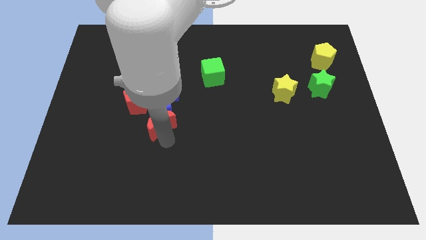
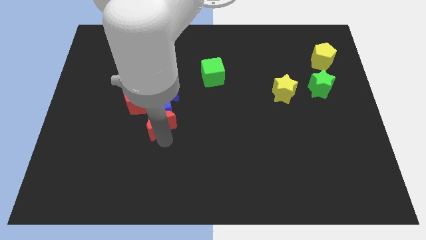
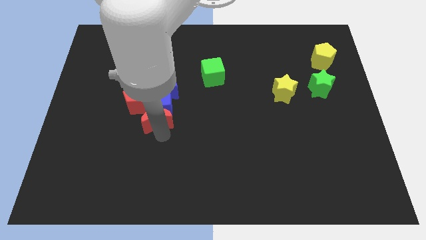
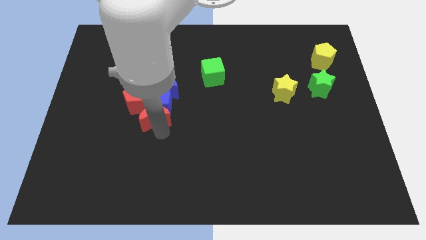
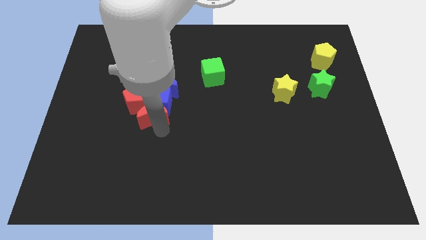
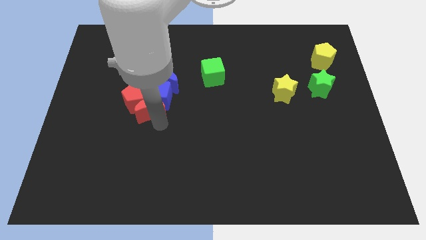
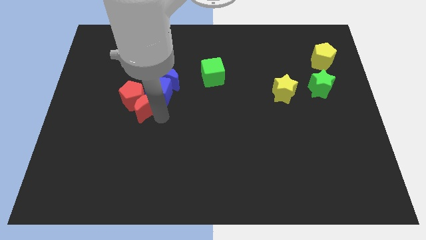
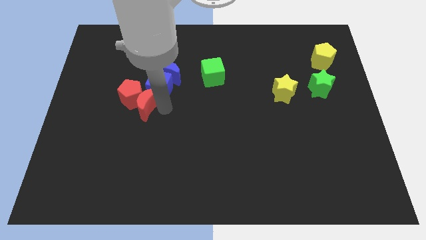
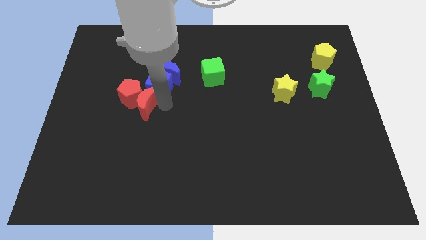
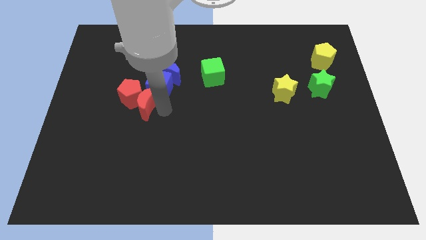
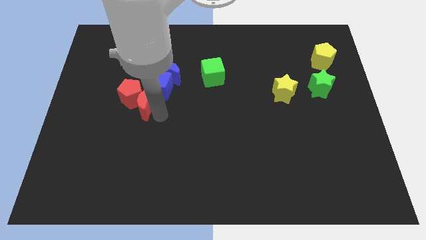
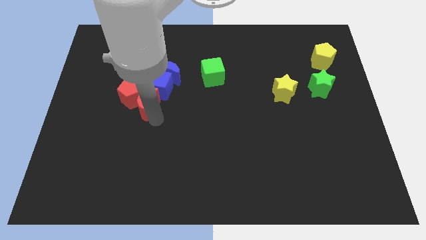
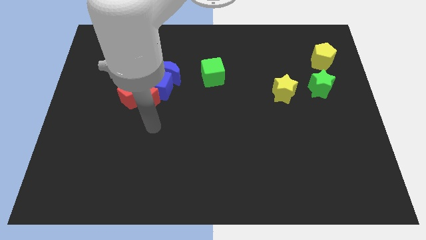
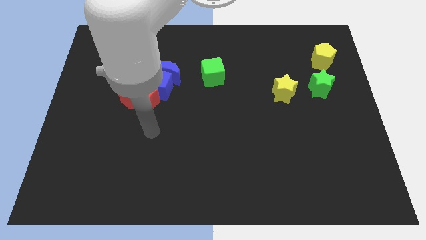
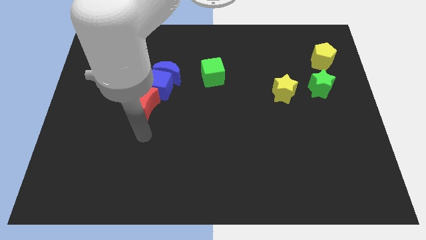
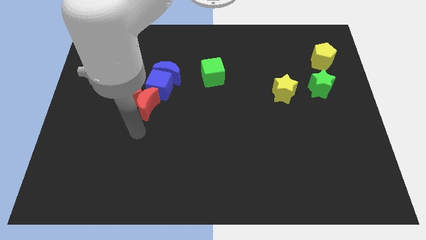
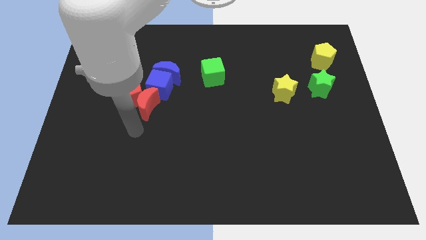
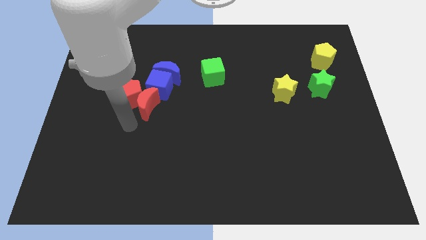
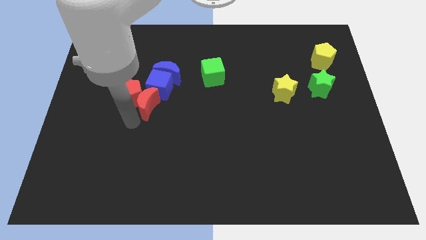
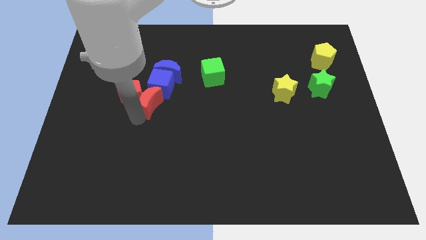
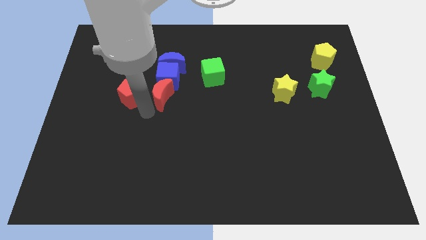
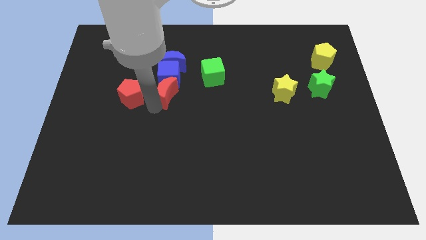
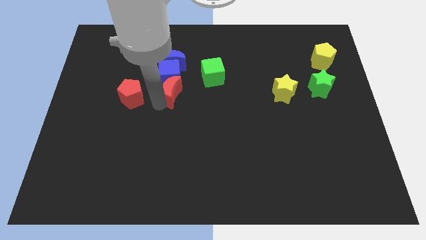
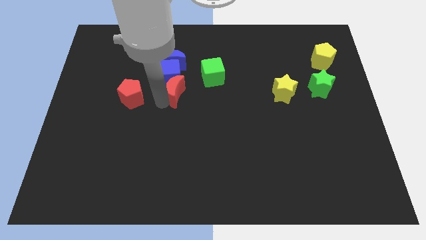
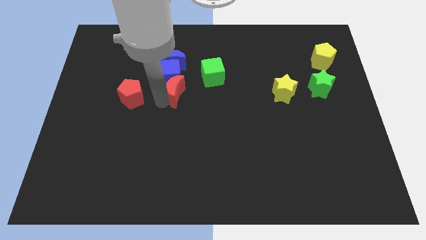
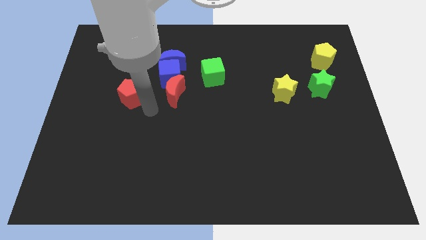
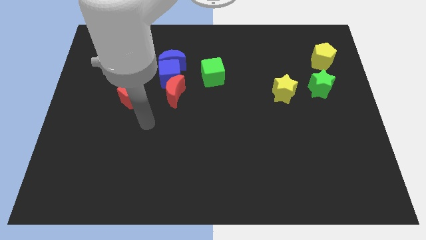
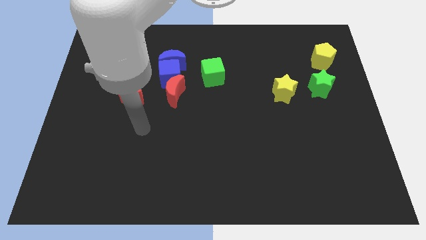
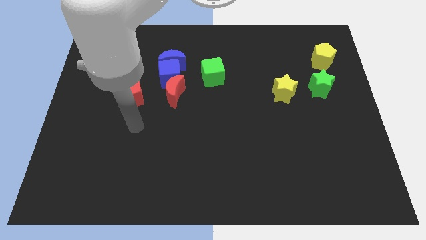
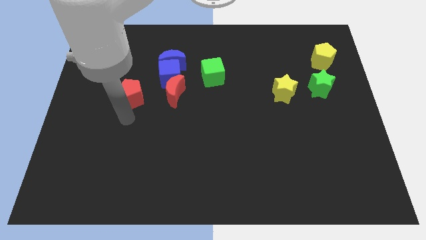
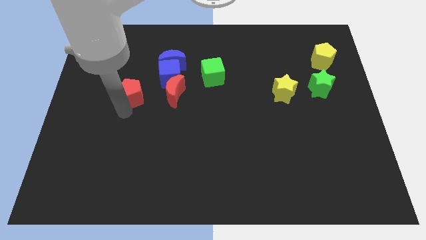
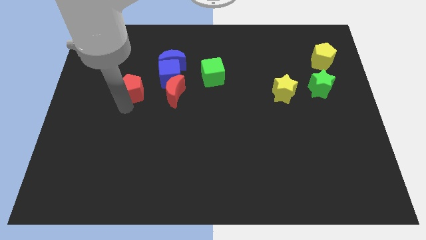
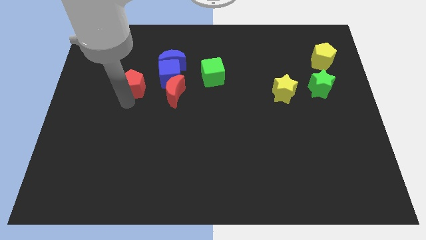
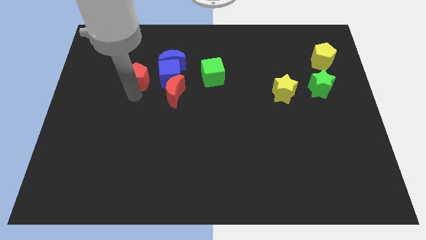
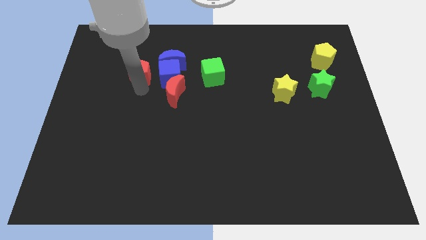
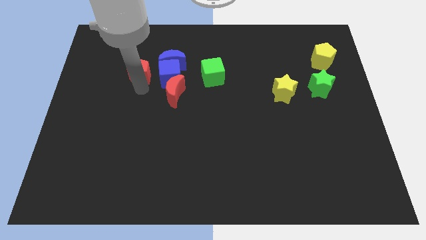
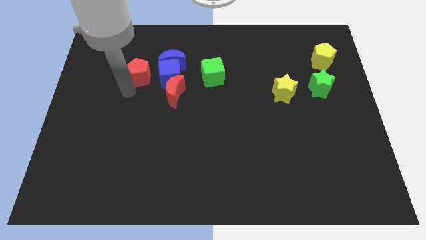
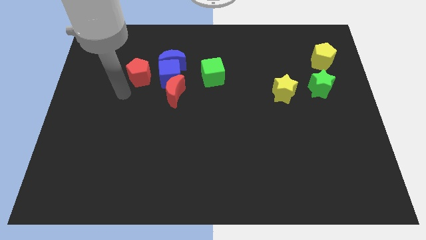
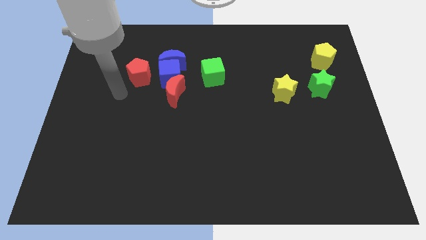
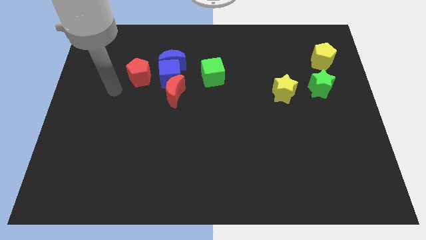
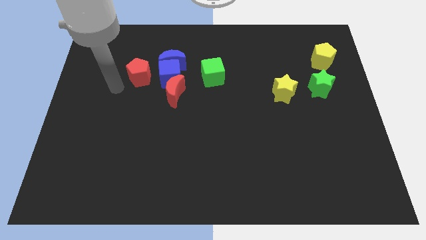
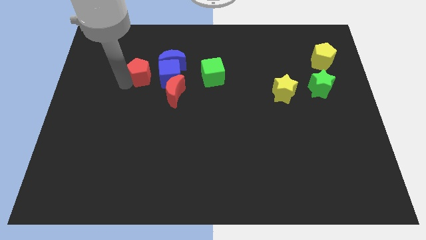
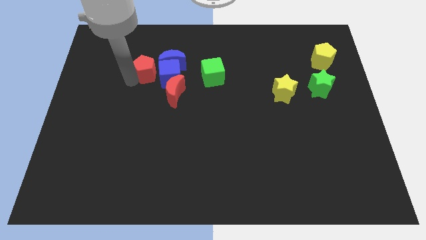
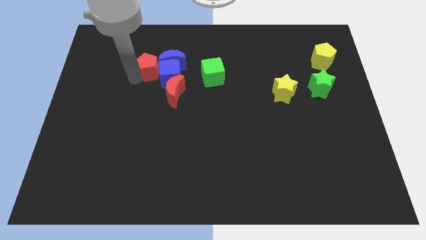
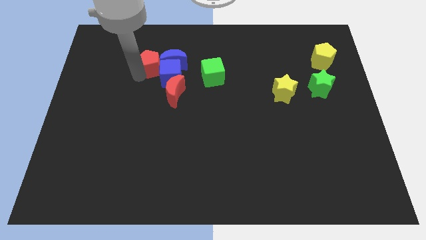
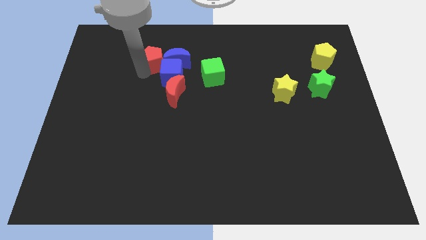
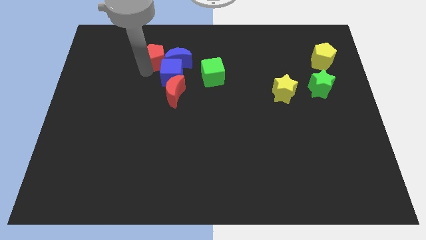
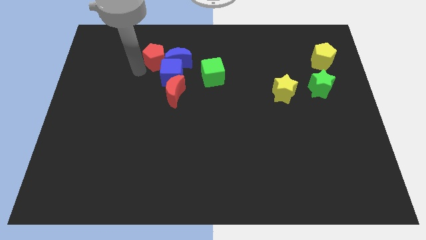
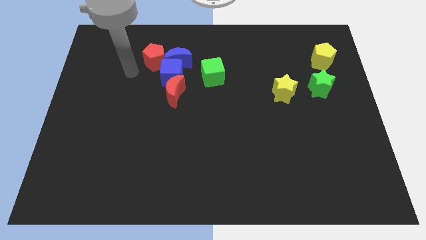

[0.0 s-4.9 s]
push a group of blocks upward

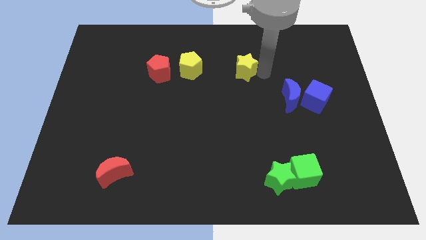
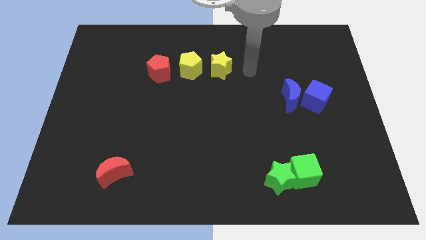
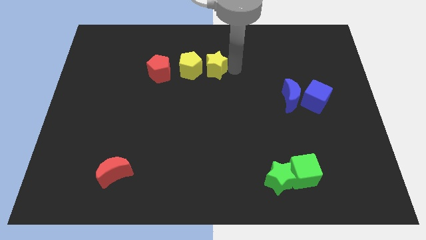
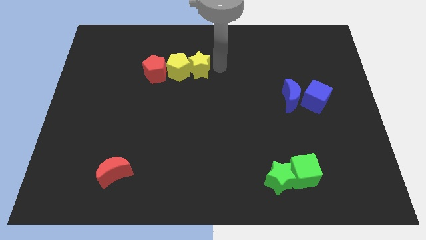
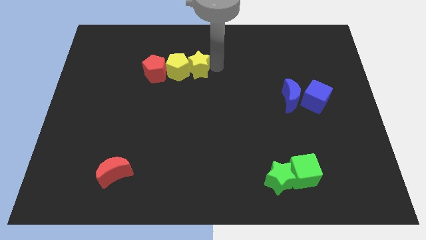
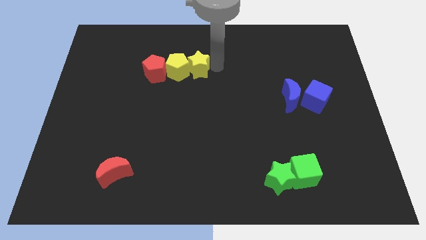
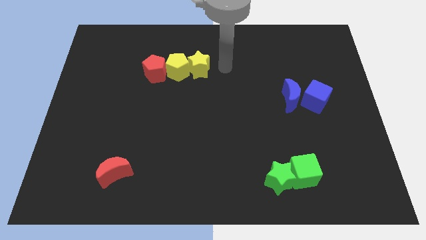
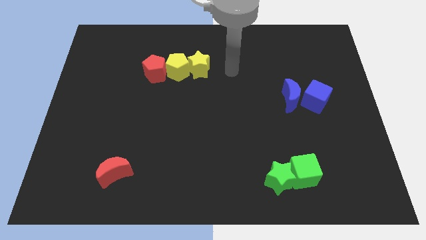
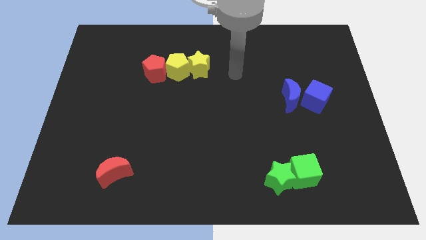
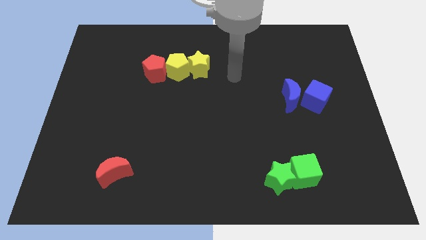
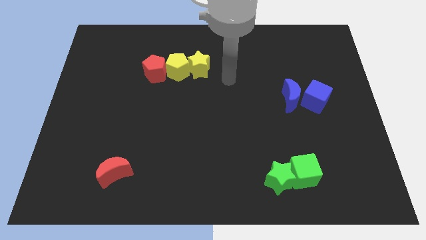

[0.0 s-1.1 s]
move the yellow star to the right of the yellow pentagon

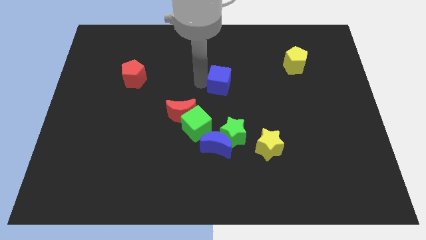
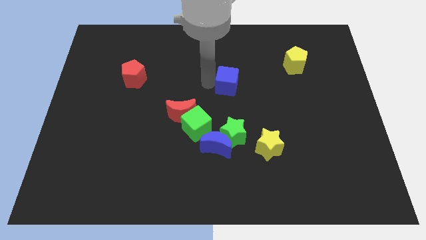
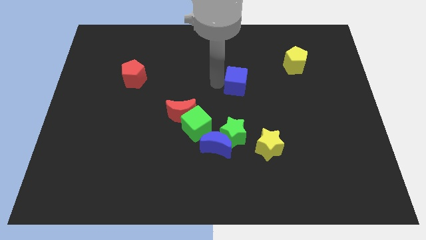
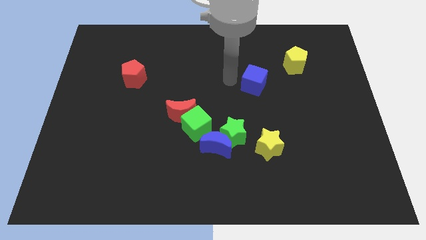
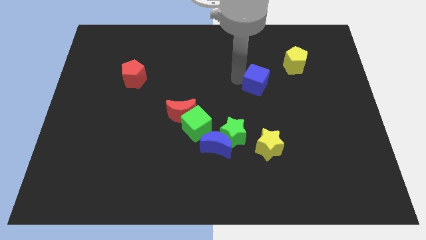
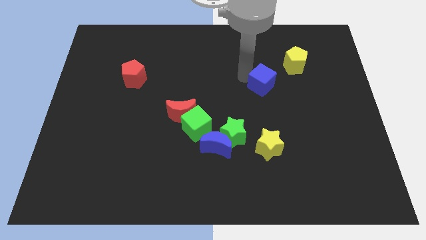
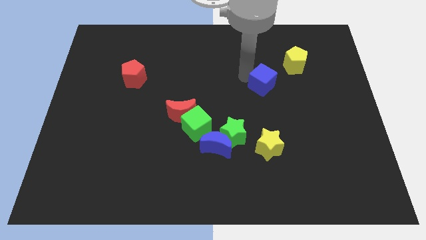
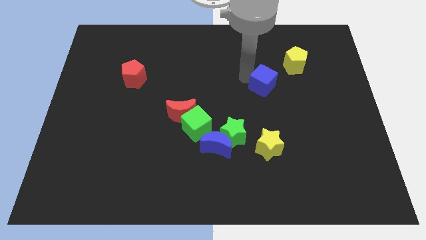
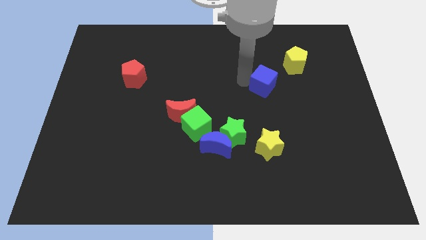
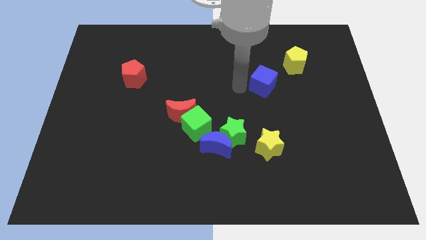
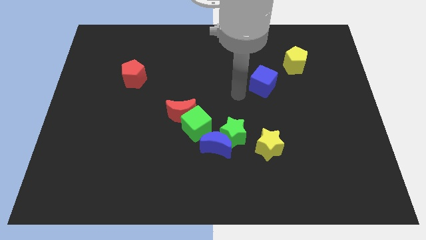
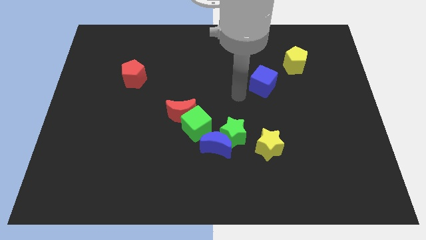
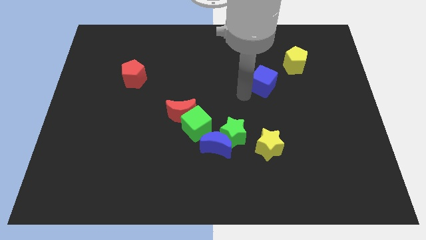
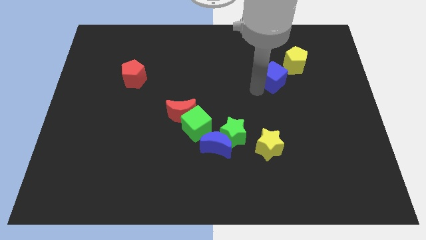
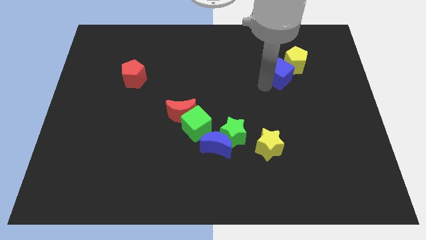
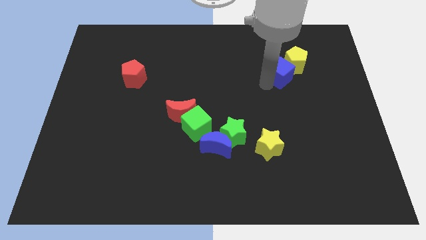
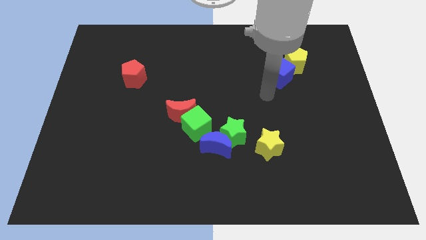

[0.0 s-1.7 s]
move blue cube into the bottom of the yellow pentagon

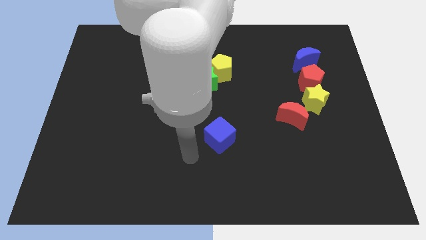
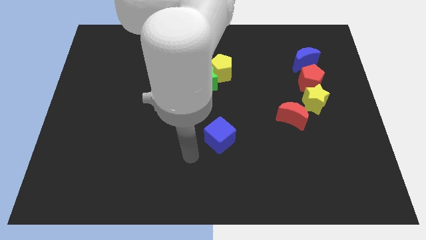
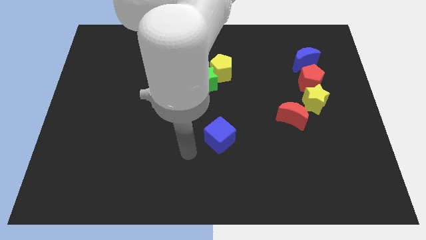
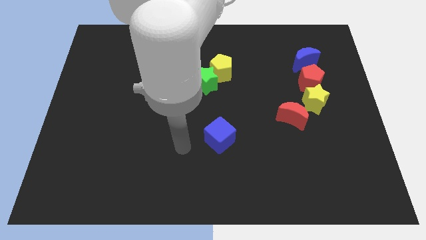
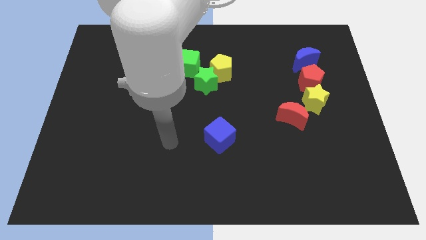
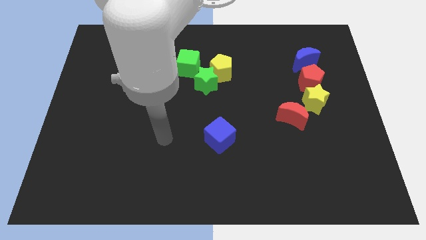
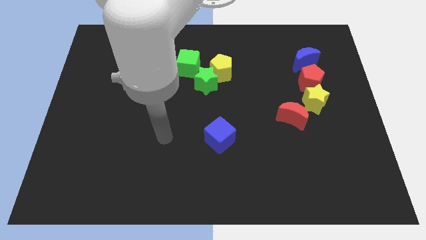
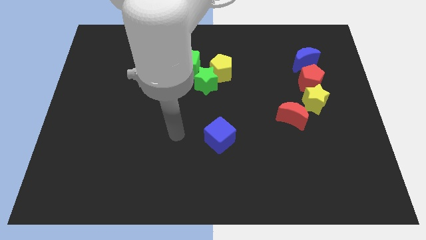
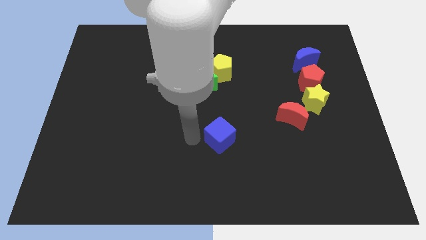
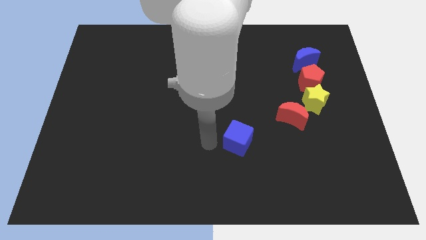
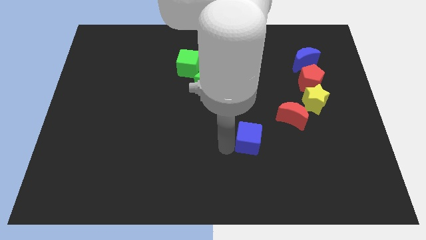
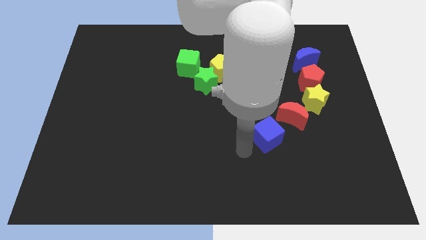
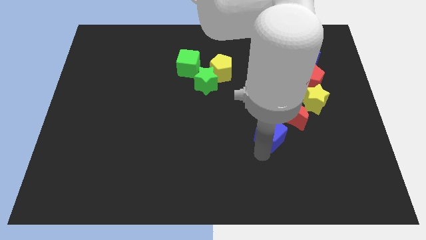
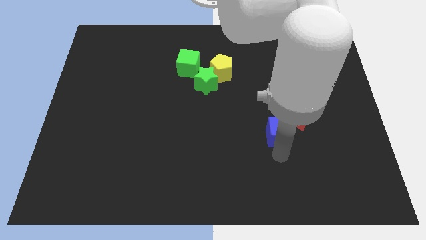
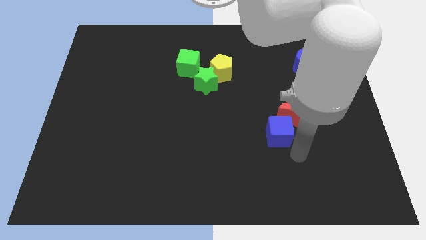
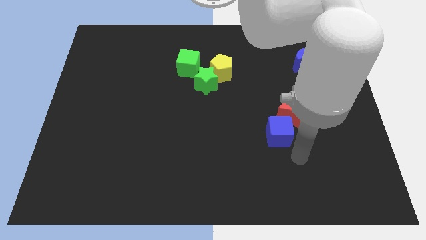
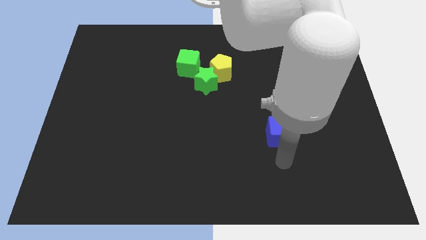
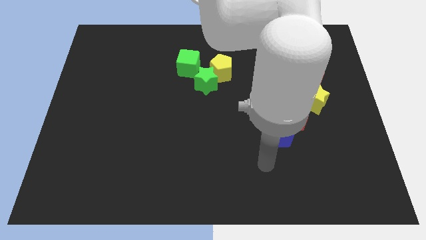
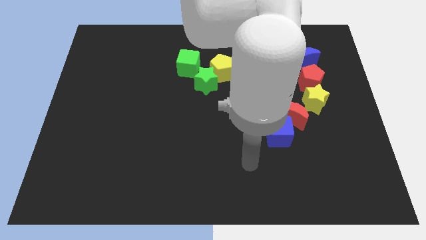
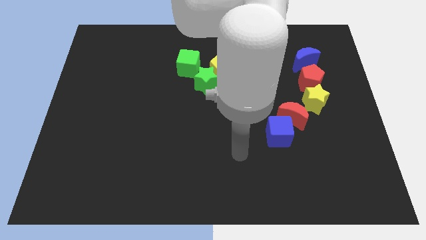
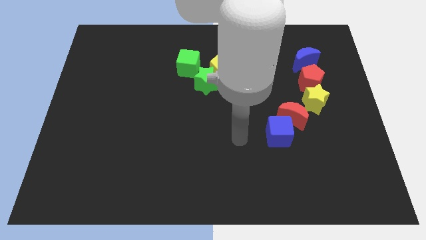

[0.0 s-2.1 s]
slide blue cube into red moon
